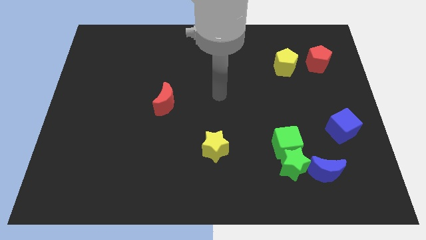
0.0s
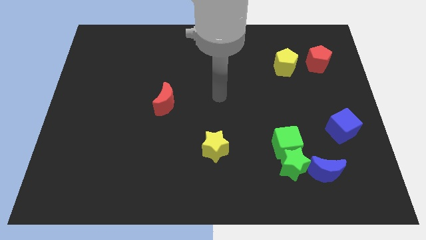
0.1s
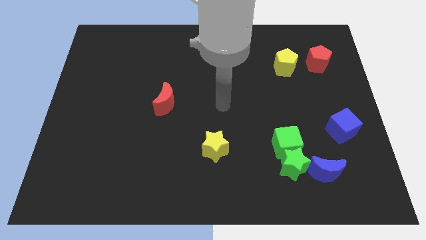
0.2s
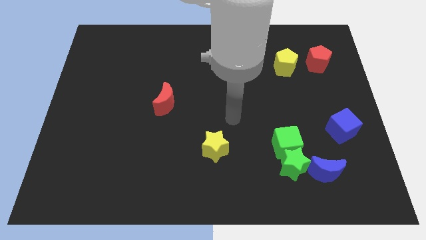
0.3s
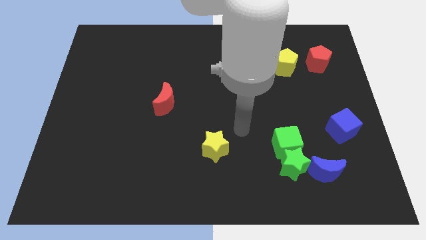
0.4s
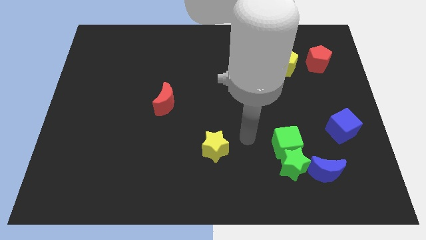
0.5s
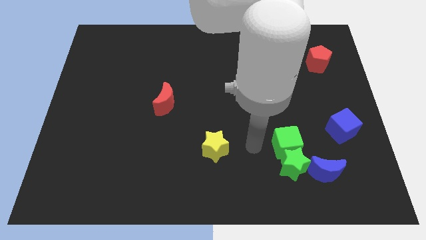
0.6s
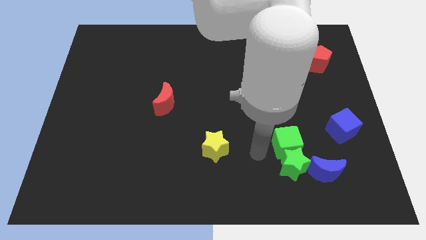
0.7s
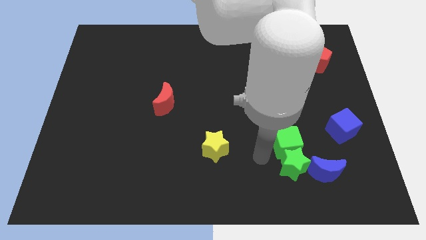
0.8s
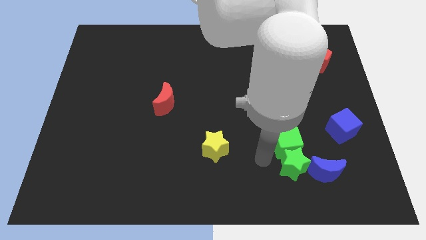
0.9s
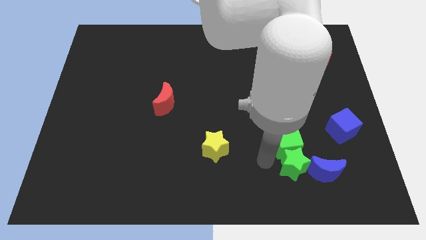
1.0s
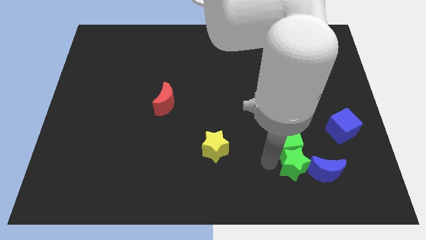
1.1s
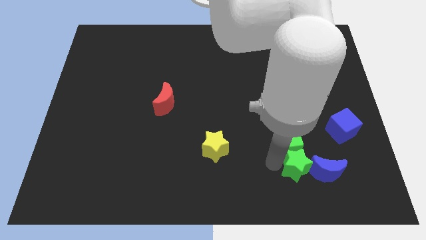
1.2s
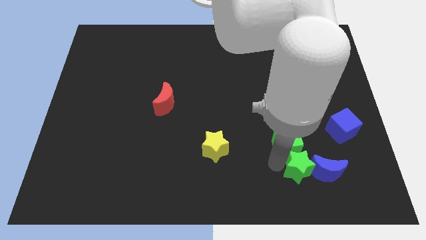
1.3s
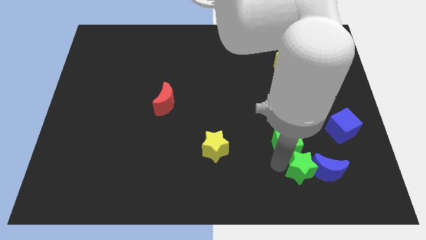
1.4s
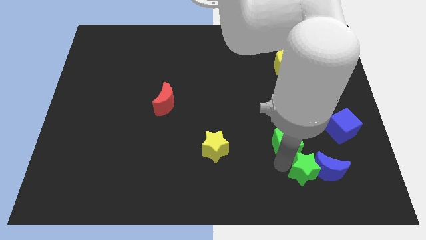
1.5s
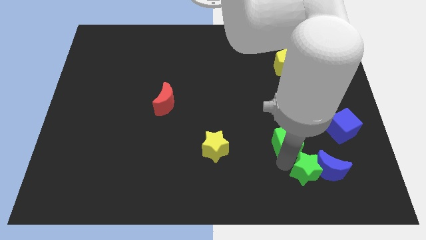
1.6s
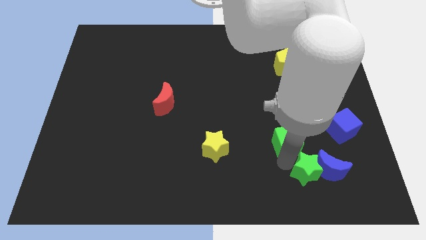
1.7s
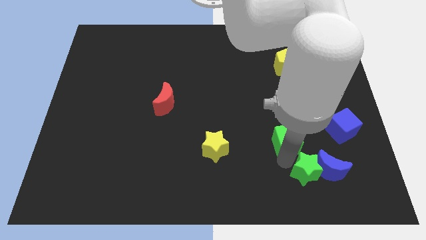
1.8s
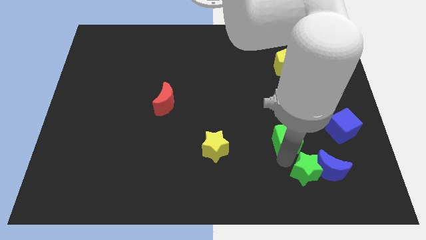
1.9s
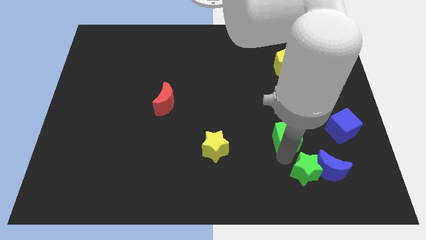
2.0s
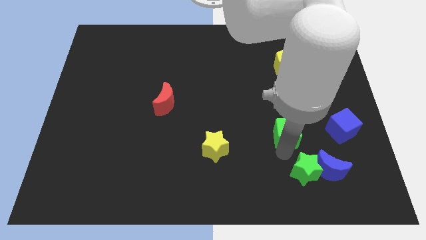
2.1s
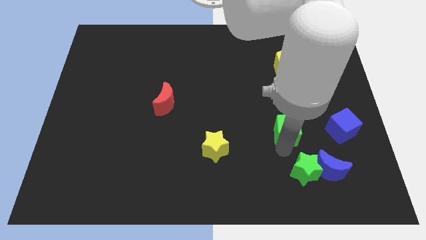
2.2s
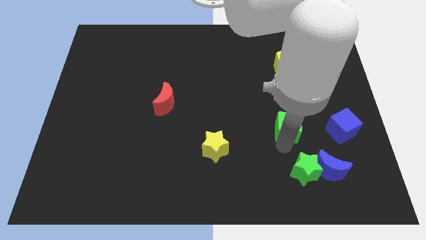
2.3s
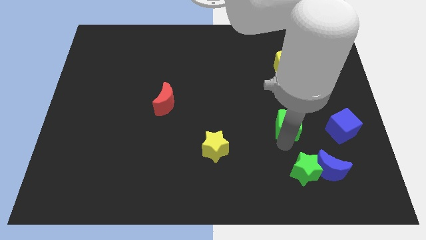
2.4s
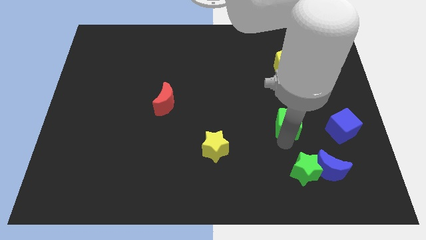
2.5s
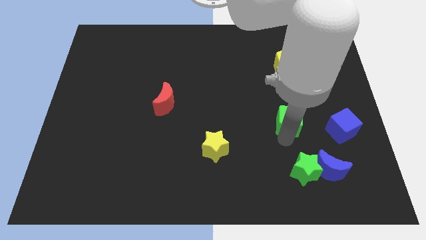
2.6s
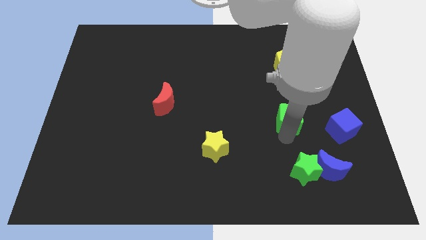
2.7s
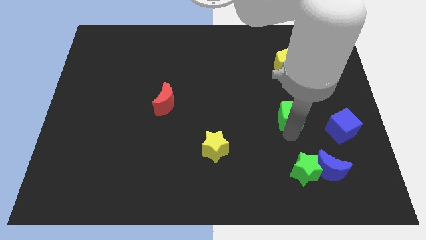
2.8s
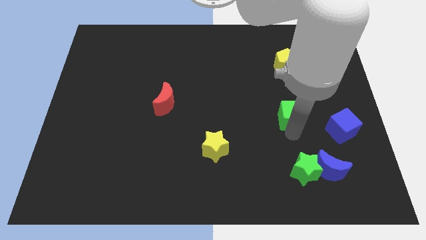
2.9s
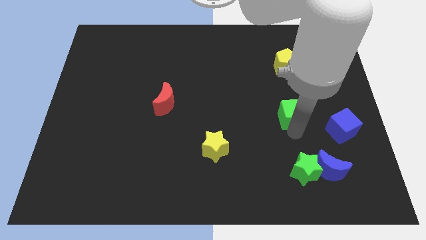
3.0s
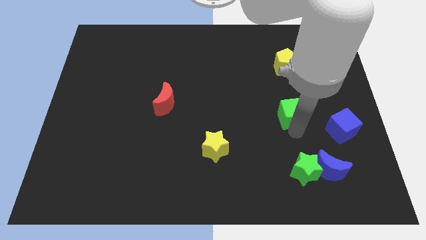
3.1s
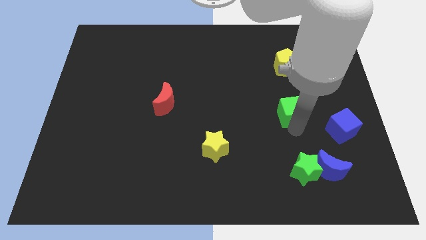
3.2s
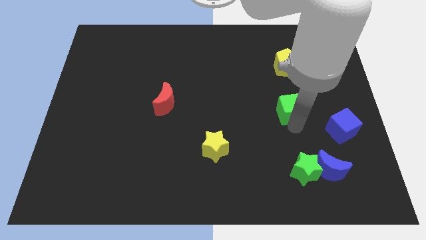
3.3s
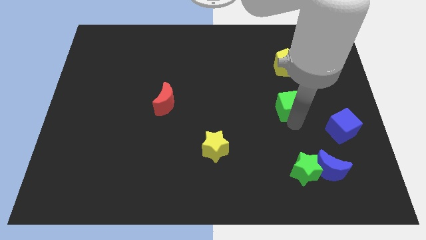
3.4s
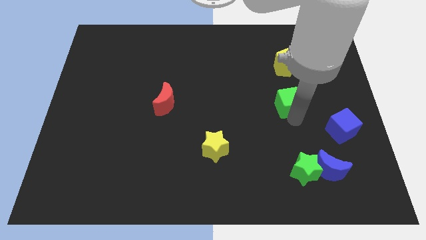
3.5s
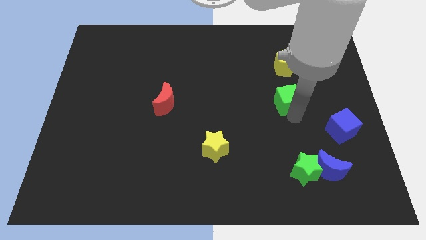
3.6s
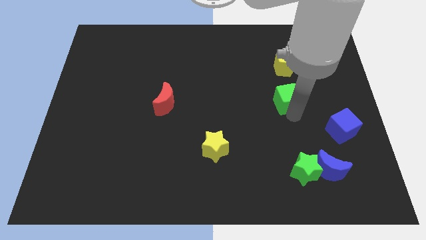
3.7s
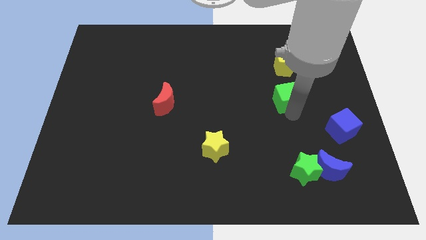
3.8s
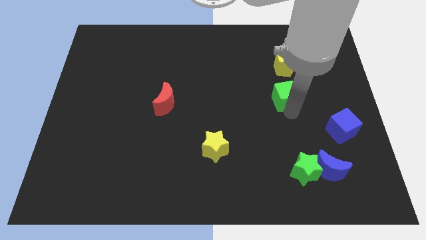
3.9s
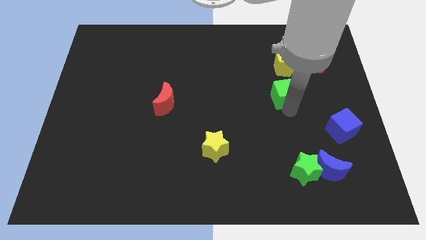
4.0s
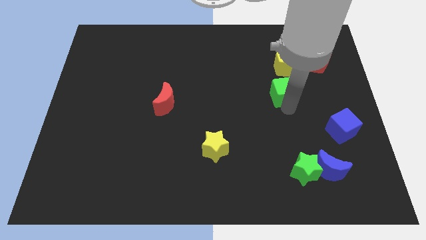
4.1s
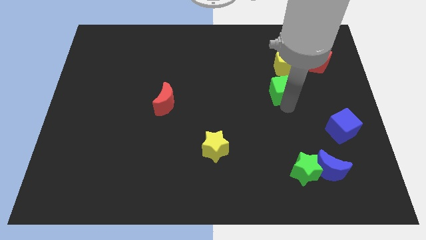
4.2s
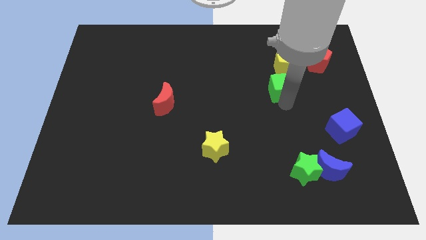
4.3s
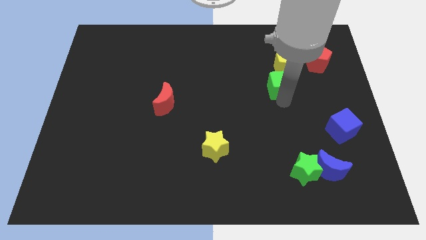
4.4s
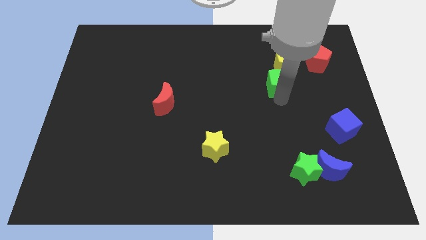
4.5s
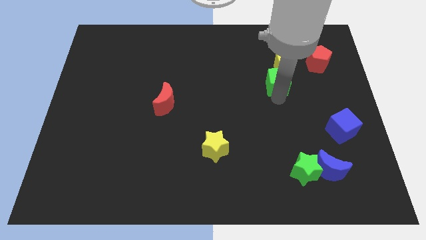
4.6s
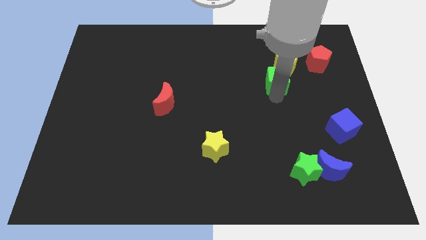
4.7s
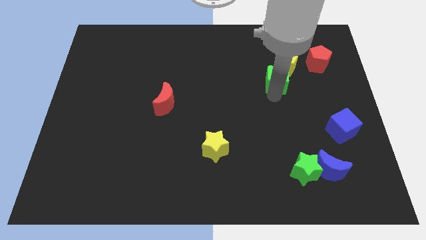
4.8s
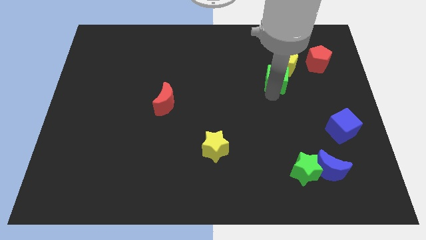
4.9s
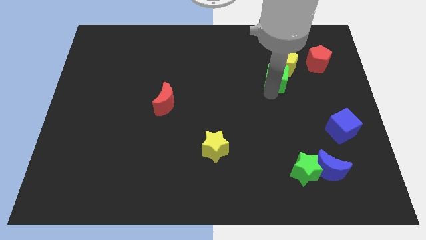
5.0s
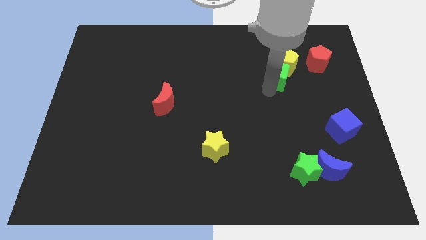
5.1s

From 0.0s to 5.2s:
slide the green cube close to the yellow pentagon

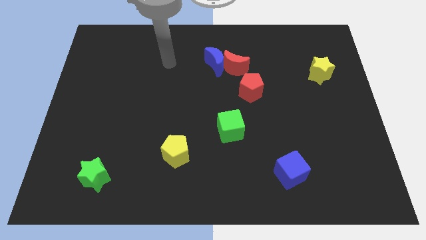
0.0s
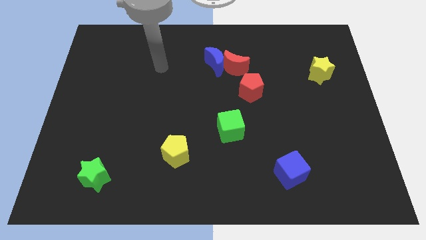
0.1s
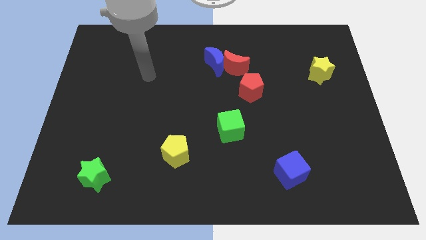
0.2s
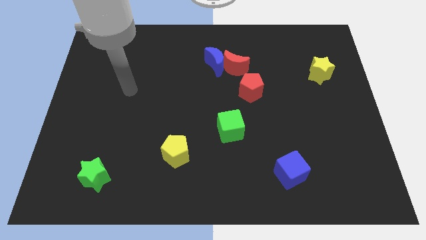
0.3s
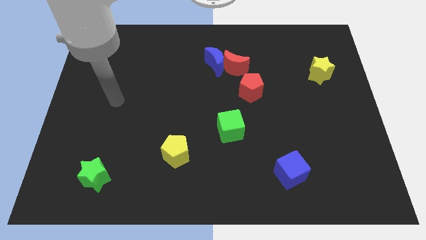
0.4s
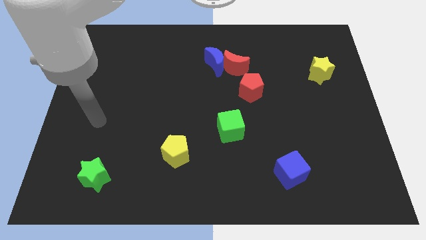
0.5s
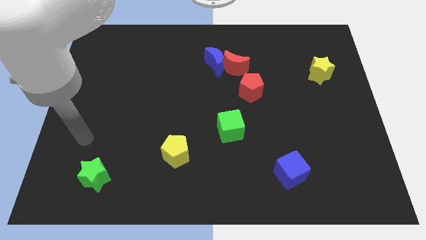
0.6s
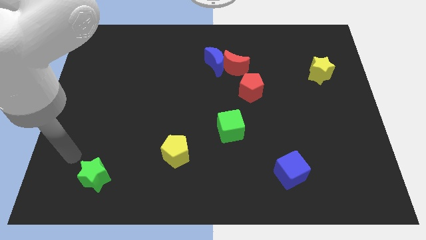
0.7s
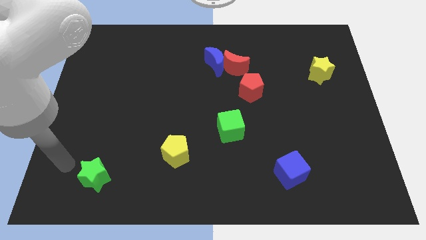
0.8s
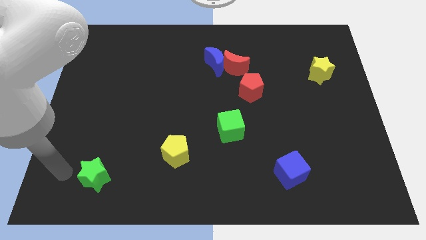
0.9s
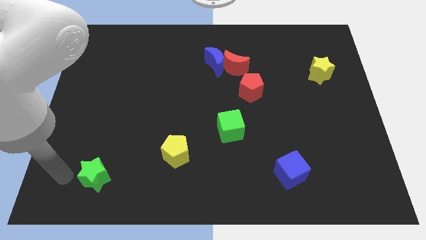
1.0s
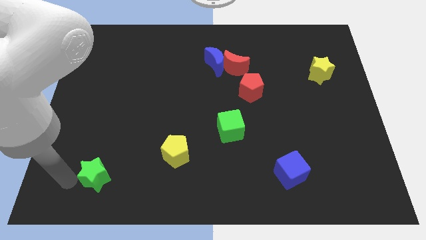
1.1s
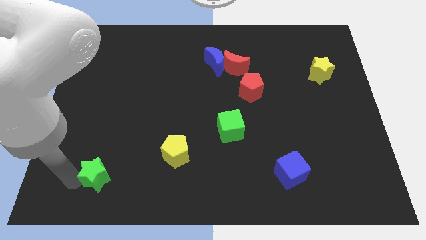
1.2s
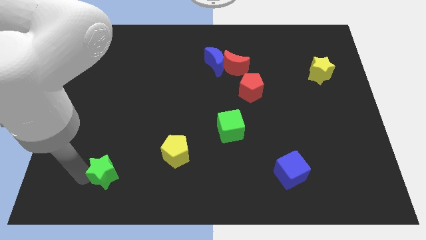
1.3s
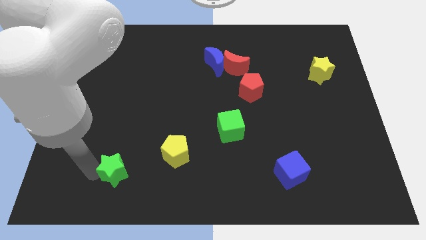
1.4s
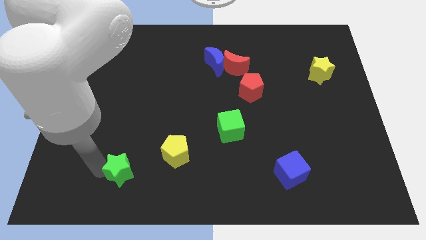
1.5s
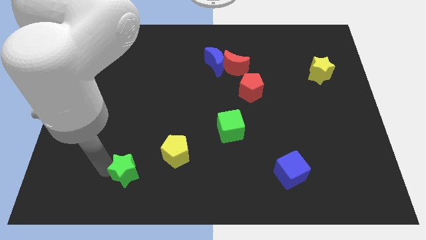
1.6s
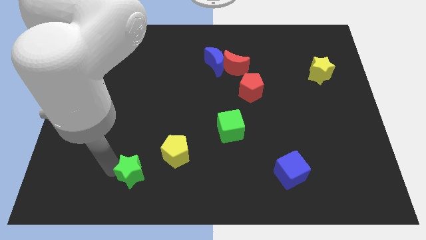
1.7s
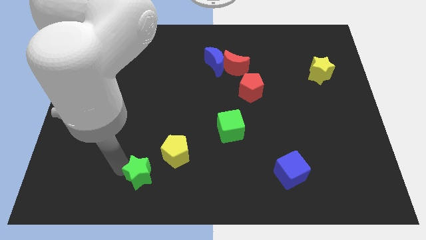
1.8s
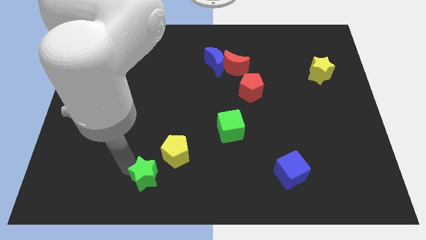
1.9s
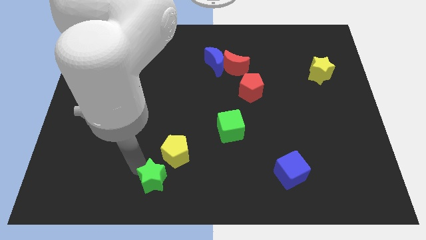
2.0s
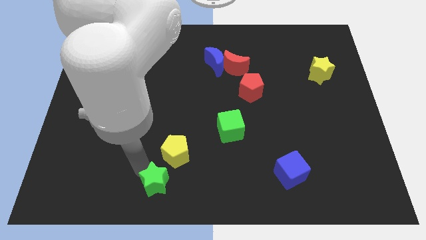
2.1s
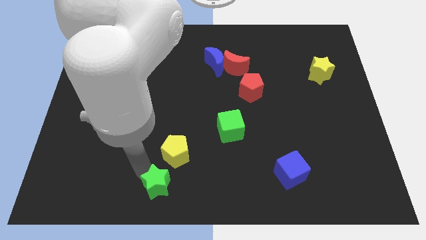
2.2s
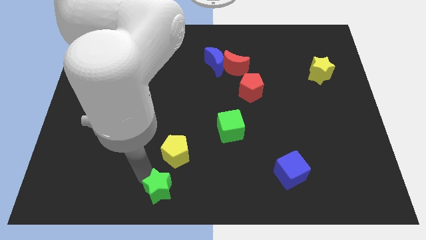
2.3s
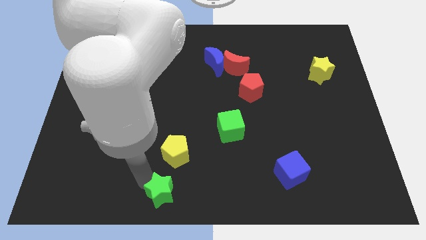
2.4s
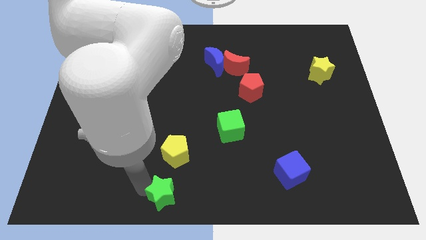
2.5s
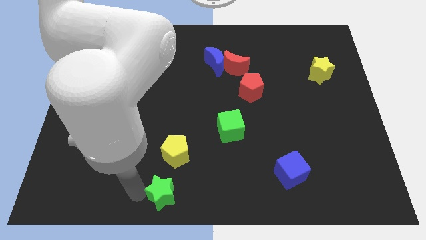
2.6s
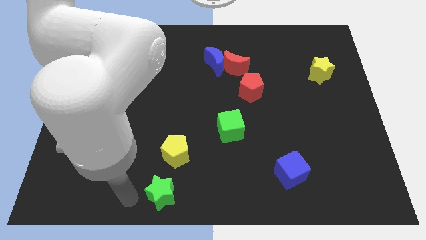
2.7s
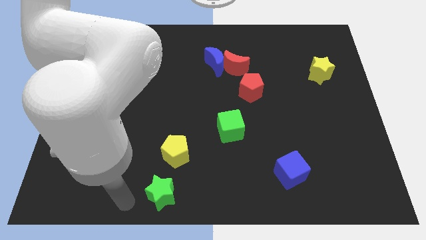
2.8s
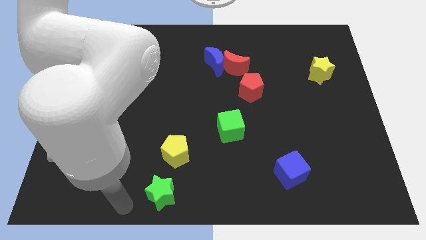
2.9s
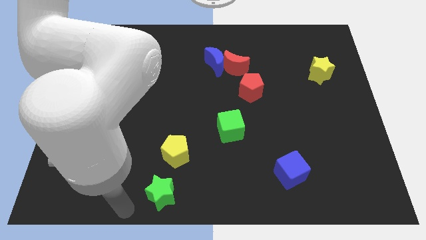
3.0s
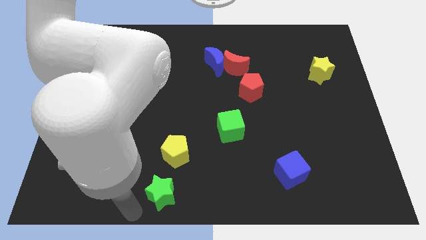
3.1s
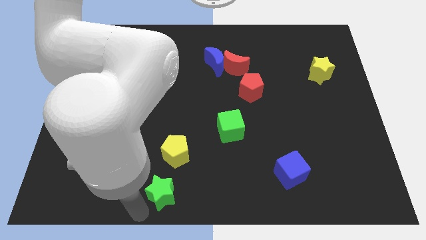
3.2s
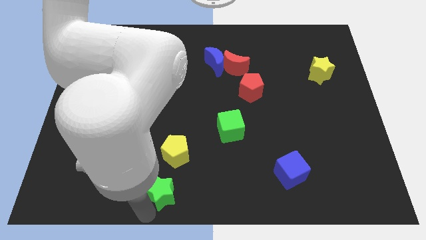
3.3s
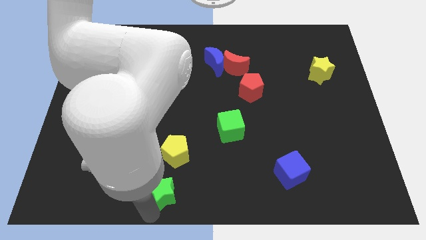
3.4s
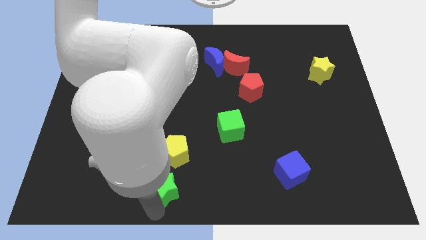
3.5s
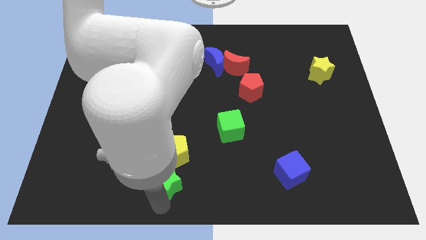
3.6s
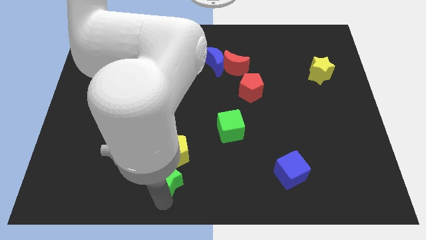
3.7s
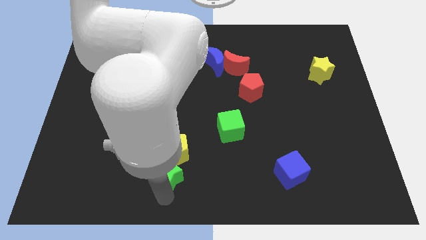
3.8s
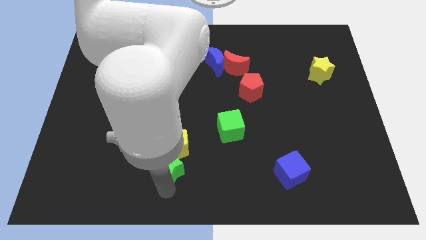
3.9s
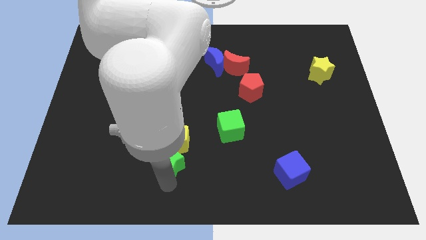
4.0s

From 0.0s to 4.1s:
move the green star towards the yellow pentagon
